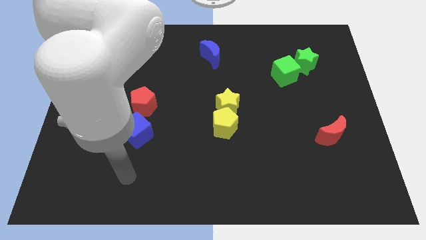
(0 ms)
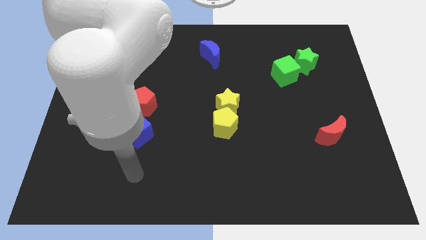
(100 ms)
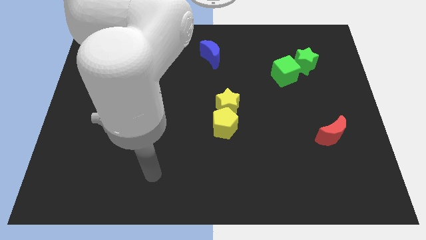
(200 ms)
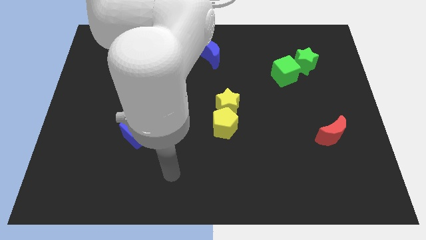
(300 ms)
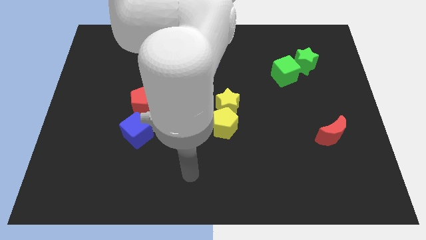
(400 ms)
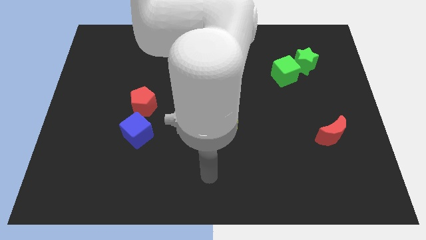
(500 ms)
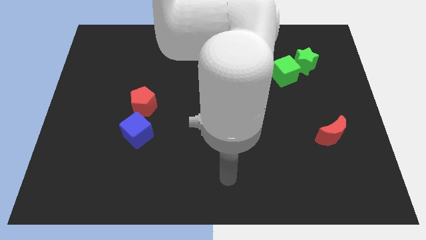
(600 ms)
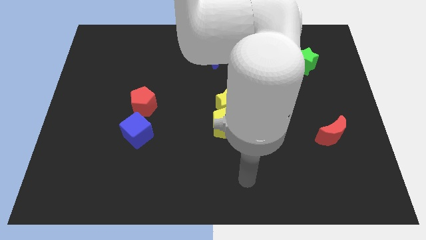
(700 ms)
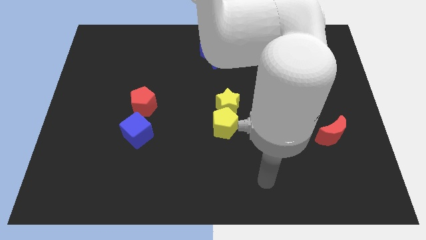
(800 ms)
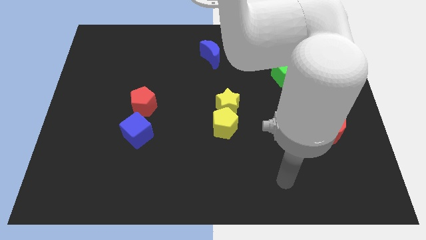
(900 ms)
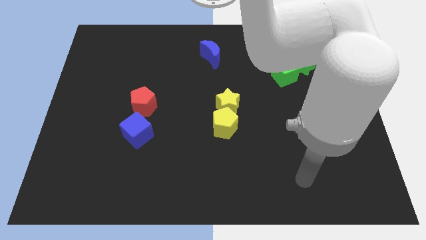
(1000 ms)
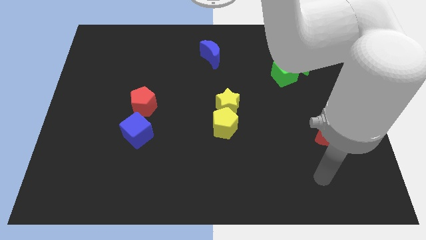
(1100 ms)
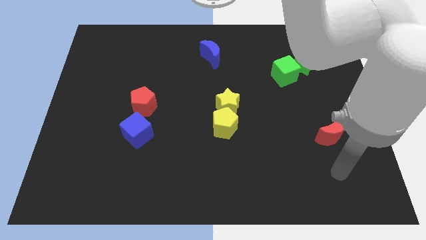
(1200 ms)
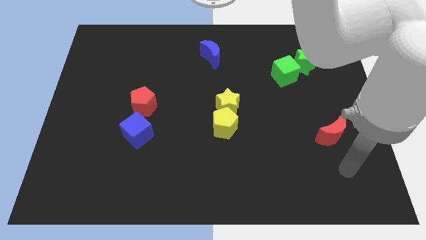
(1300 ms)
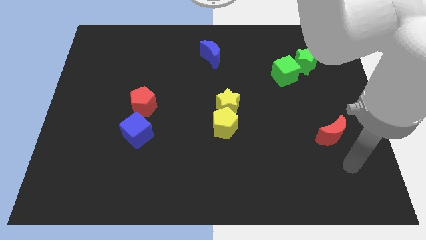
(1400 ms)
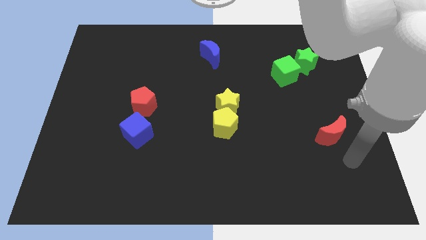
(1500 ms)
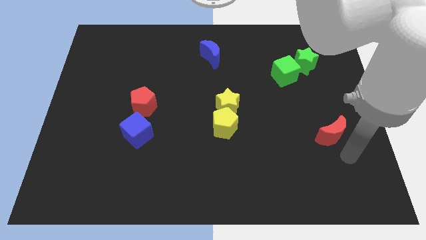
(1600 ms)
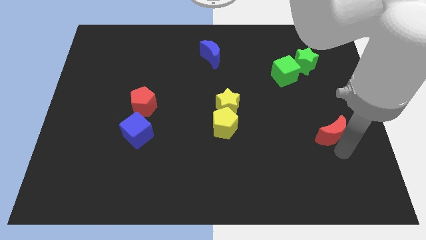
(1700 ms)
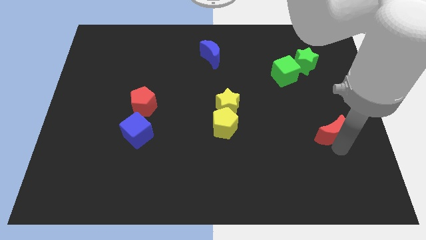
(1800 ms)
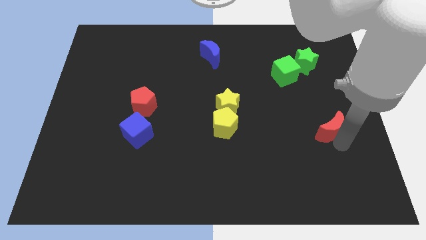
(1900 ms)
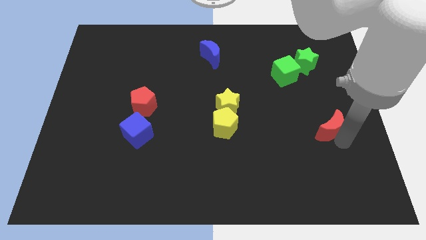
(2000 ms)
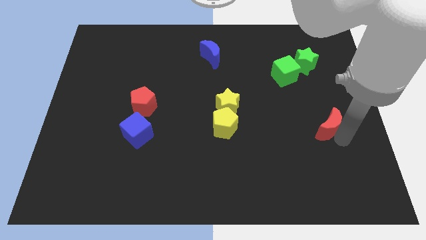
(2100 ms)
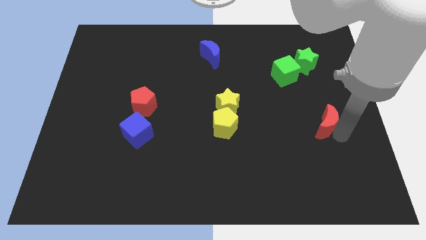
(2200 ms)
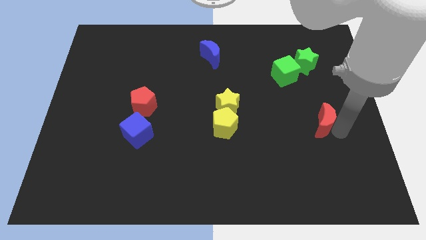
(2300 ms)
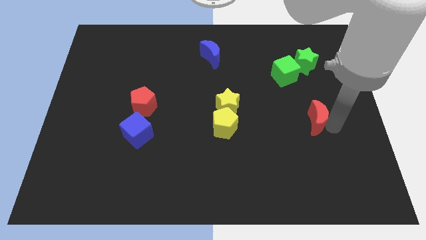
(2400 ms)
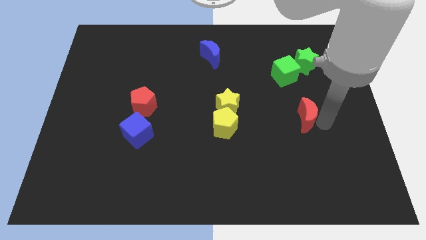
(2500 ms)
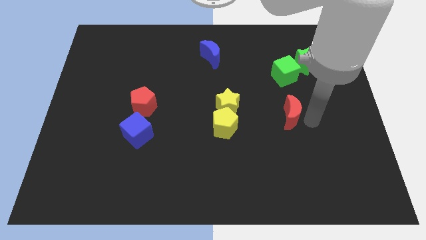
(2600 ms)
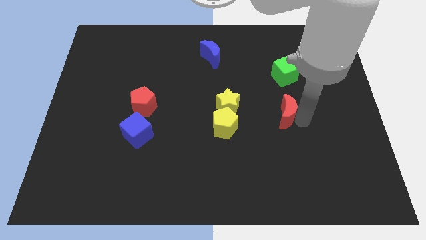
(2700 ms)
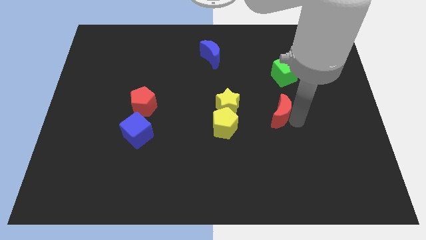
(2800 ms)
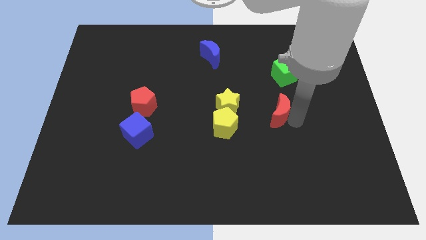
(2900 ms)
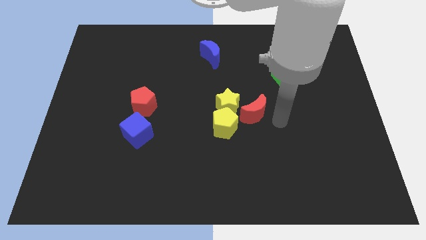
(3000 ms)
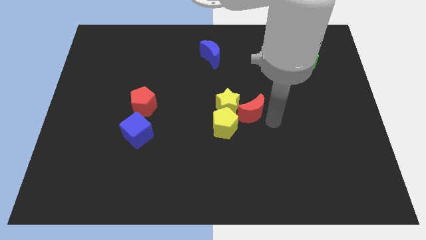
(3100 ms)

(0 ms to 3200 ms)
slide the red crescent slightly towards the yellow blocks

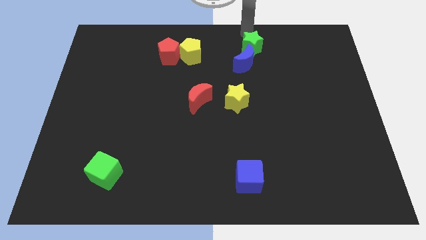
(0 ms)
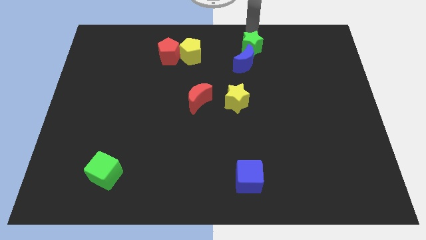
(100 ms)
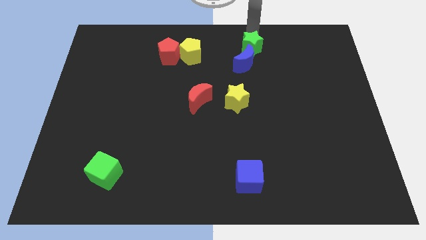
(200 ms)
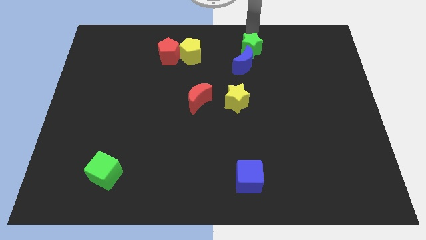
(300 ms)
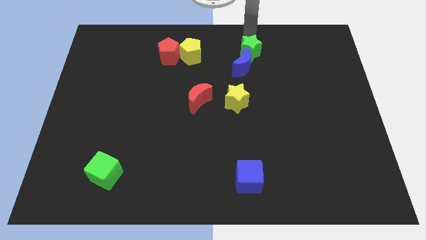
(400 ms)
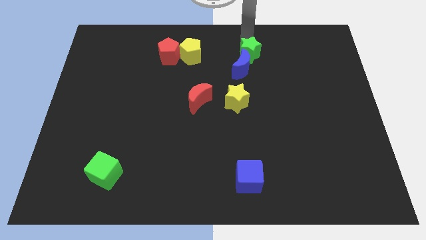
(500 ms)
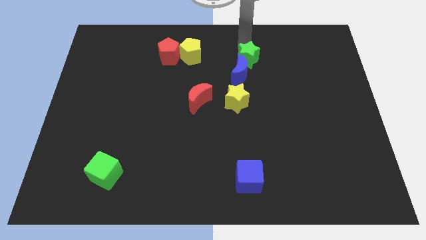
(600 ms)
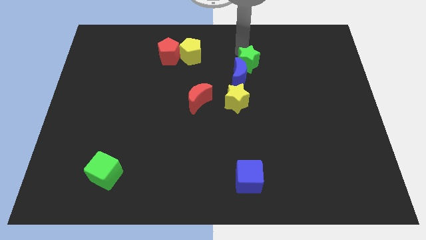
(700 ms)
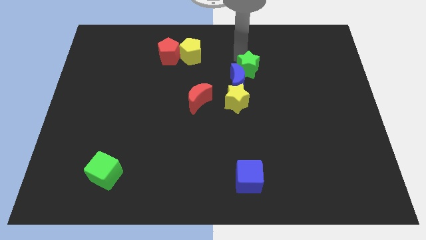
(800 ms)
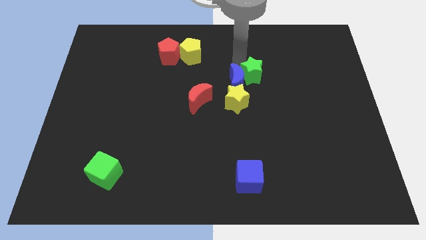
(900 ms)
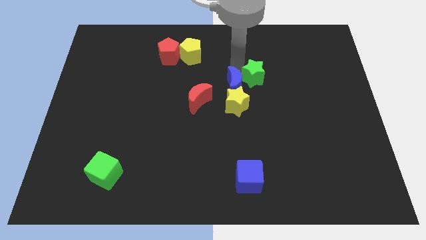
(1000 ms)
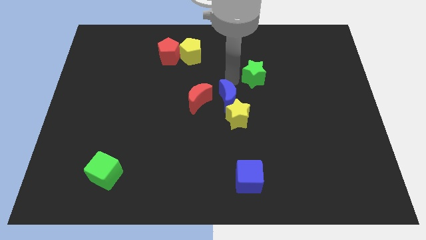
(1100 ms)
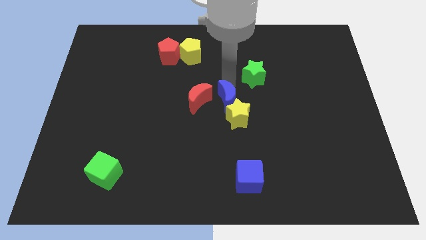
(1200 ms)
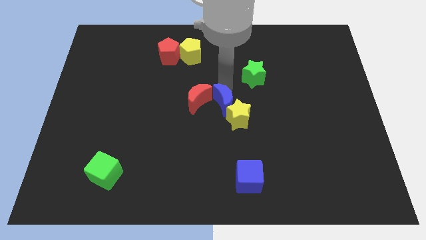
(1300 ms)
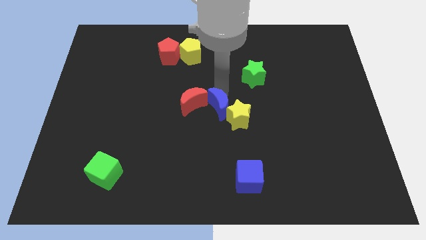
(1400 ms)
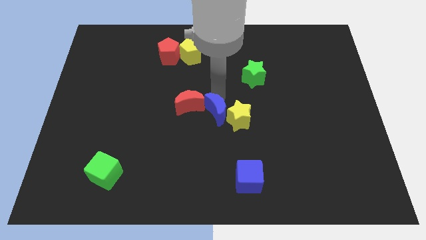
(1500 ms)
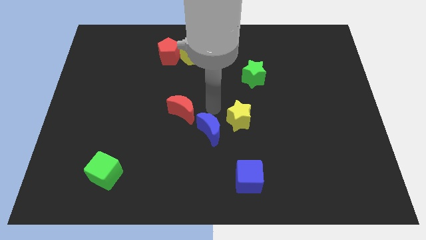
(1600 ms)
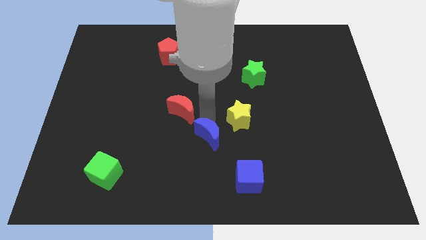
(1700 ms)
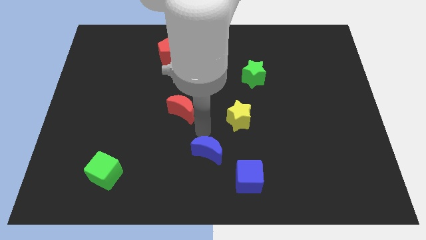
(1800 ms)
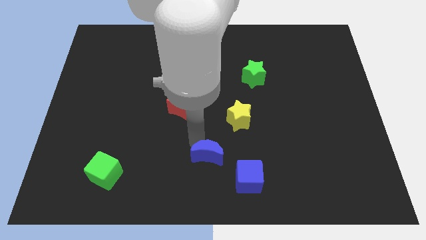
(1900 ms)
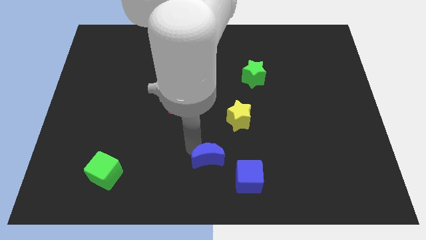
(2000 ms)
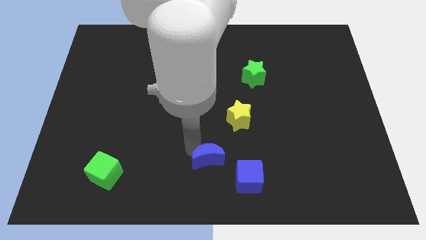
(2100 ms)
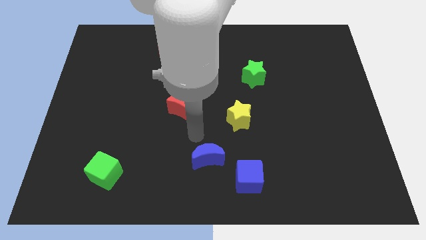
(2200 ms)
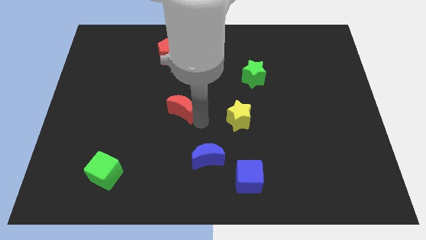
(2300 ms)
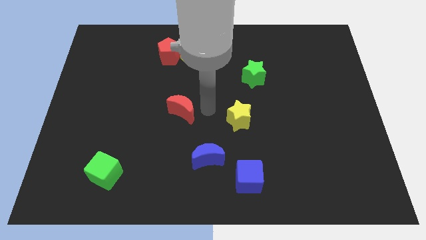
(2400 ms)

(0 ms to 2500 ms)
put the blue crescent at the bottom center of the red moon and yellow star

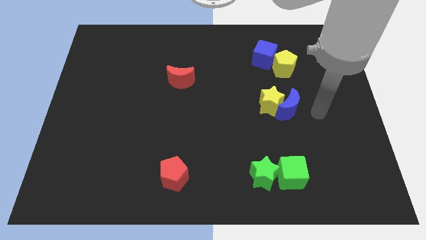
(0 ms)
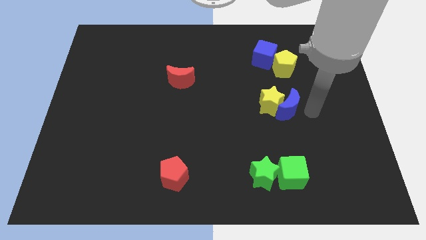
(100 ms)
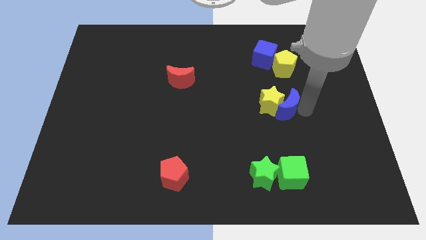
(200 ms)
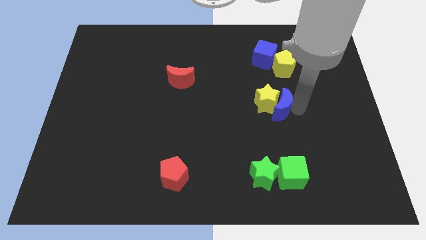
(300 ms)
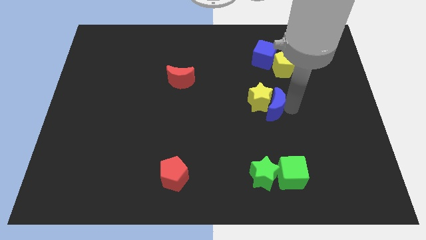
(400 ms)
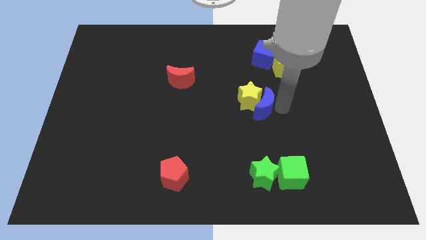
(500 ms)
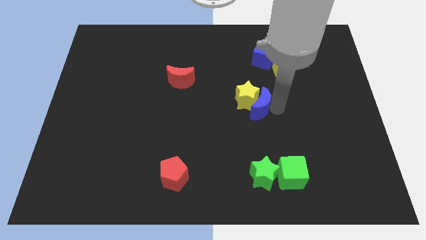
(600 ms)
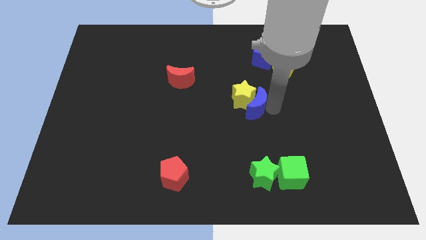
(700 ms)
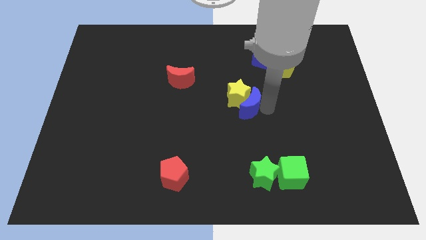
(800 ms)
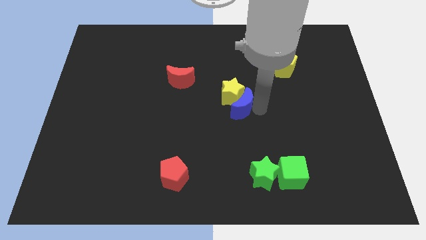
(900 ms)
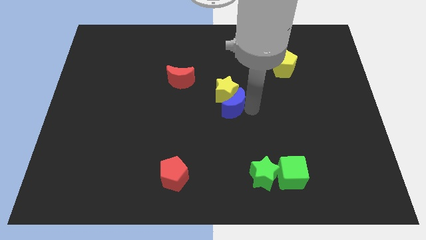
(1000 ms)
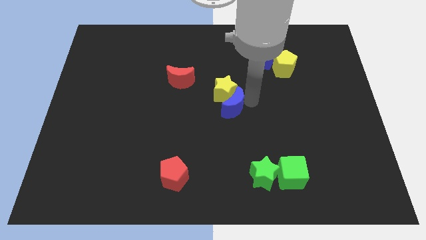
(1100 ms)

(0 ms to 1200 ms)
push the blue crescent into the yellow star

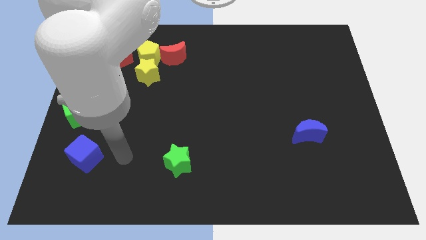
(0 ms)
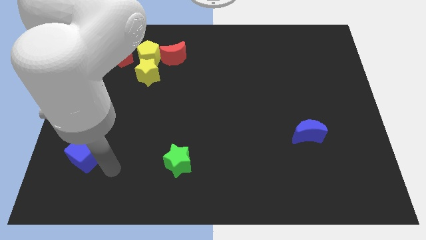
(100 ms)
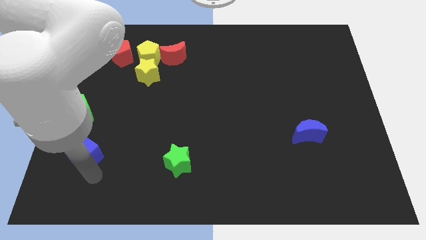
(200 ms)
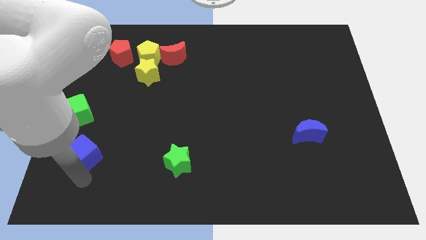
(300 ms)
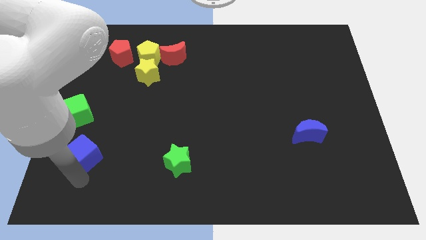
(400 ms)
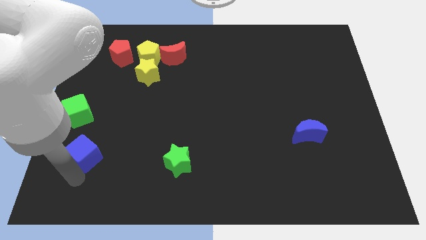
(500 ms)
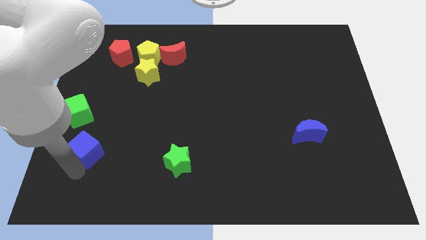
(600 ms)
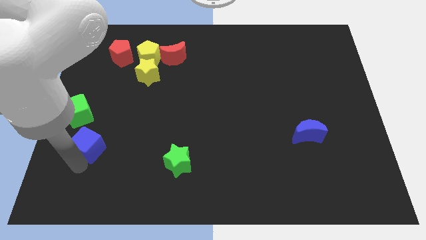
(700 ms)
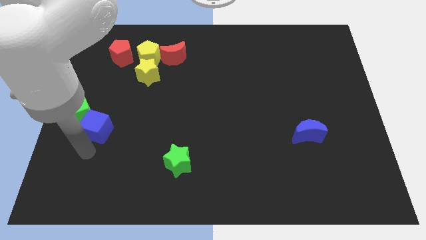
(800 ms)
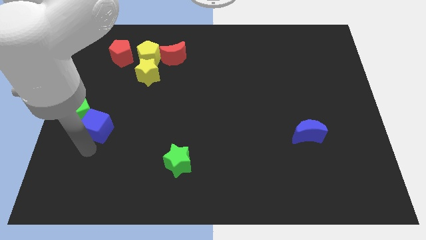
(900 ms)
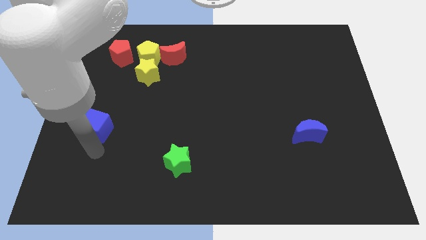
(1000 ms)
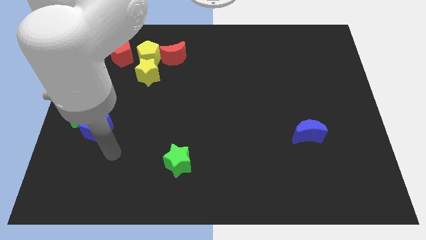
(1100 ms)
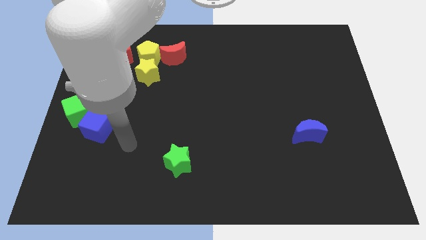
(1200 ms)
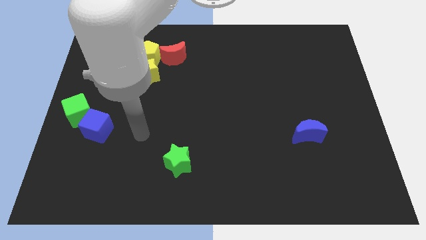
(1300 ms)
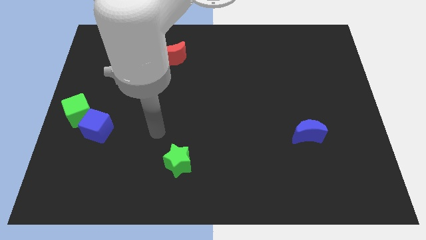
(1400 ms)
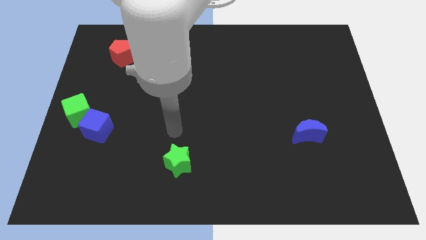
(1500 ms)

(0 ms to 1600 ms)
push the blue cube close to the green cube

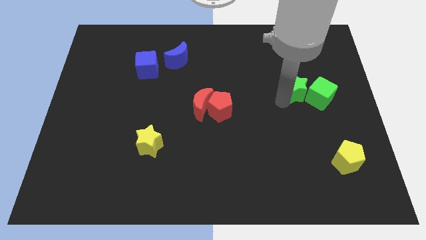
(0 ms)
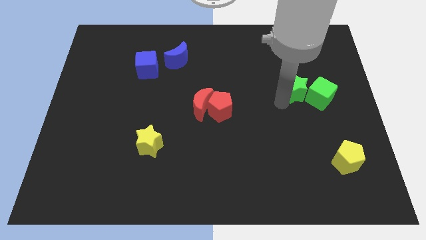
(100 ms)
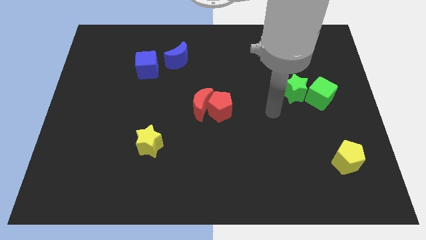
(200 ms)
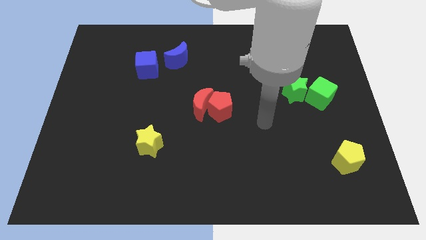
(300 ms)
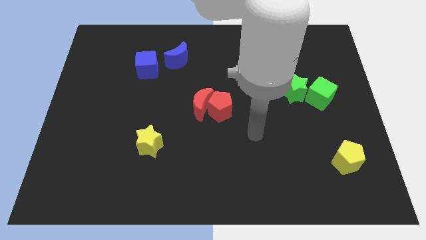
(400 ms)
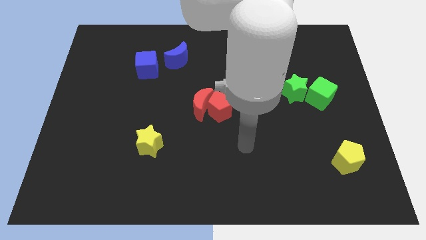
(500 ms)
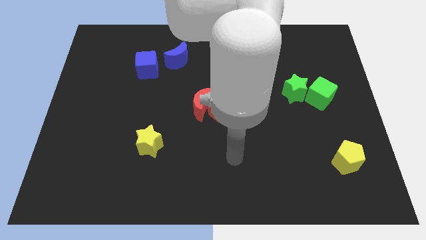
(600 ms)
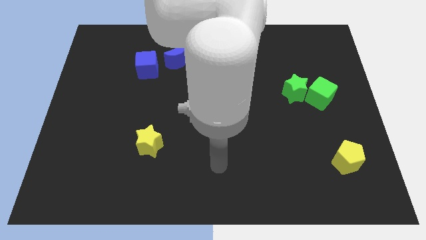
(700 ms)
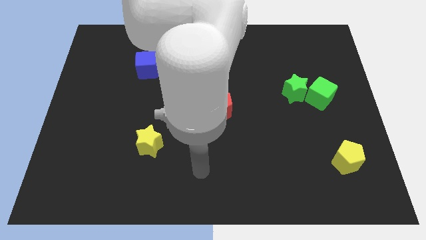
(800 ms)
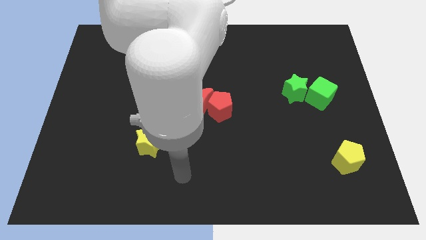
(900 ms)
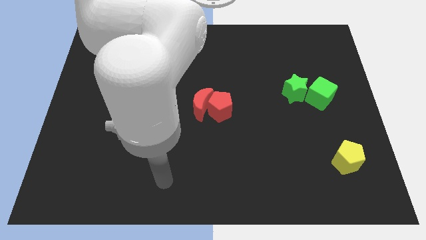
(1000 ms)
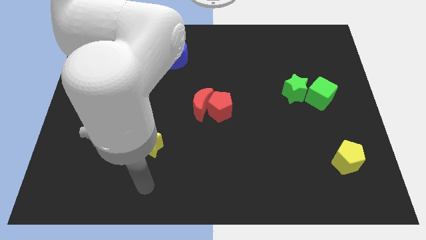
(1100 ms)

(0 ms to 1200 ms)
point your arm at the bottom of the yellow star
